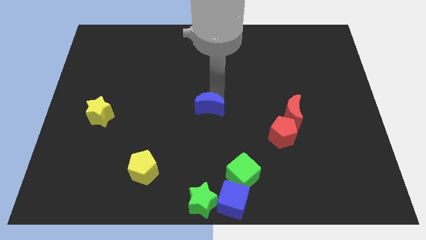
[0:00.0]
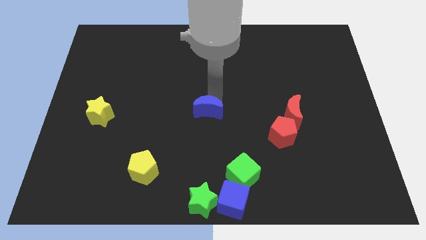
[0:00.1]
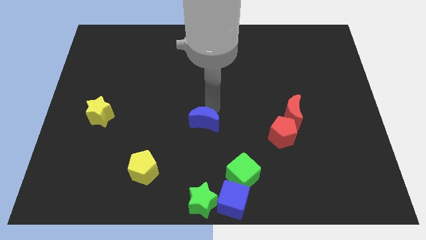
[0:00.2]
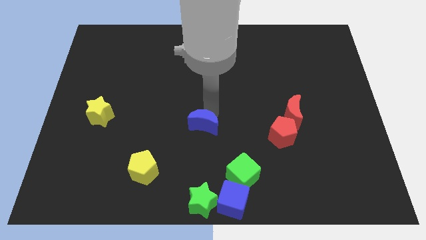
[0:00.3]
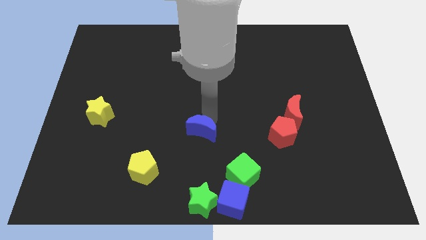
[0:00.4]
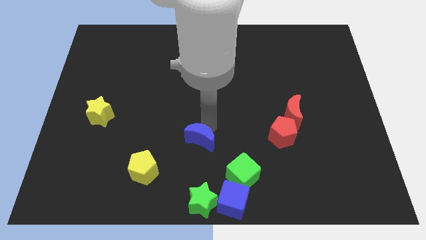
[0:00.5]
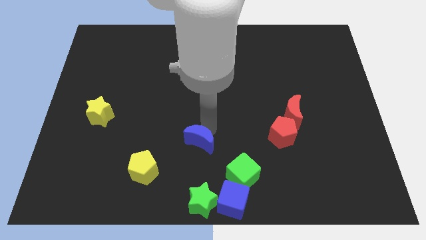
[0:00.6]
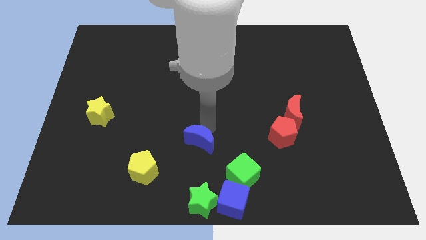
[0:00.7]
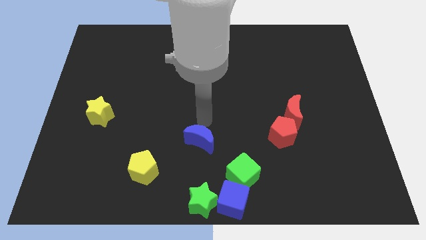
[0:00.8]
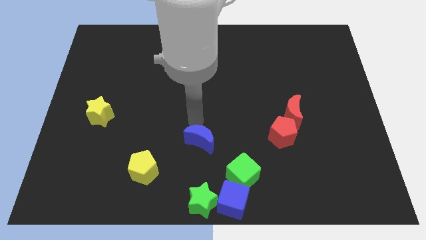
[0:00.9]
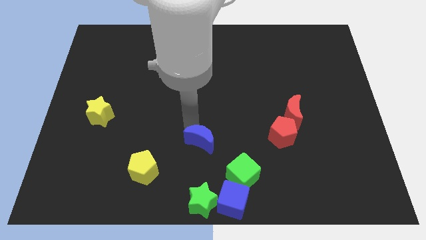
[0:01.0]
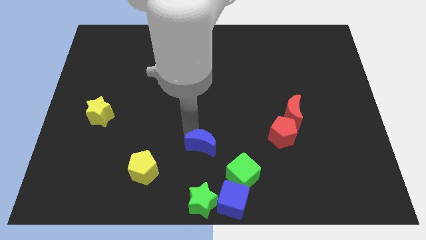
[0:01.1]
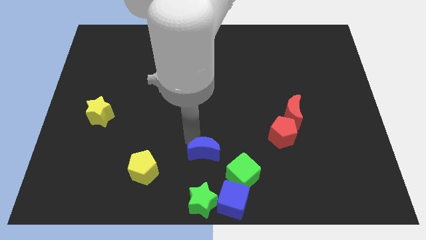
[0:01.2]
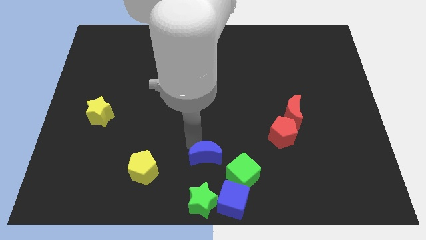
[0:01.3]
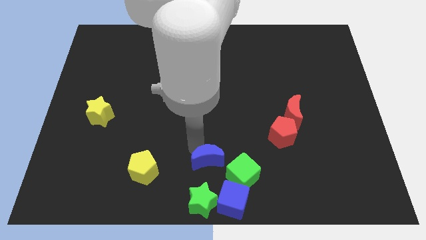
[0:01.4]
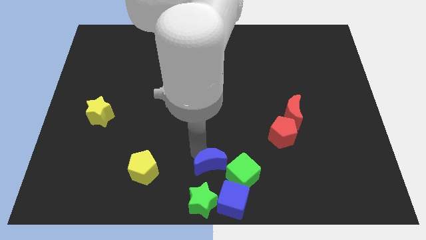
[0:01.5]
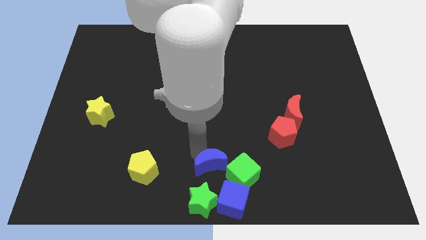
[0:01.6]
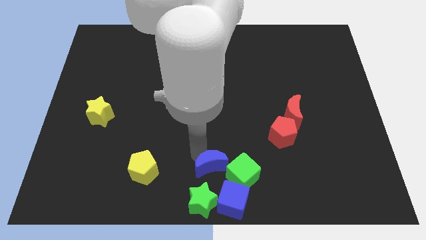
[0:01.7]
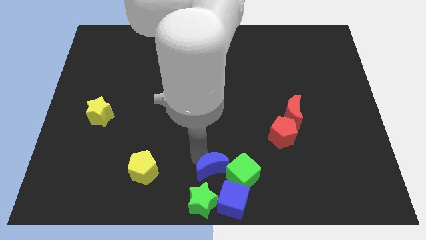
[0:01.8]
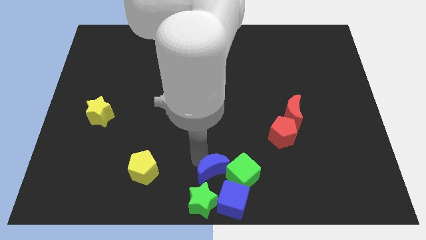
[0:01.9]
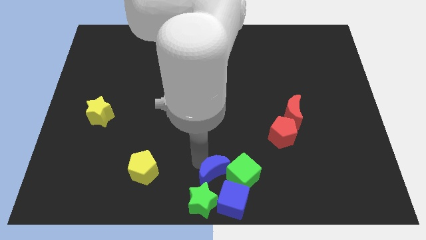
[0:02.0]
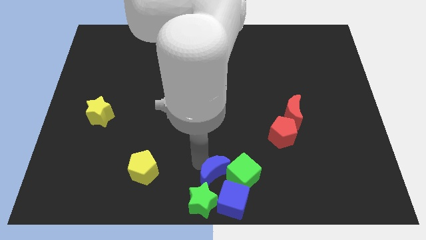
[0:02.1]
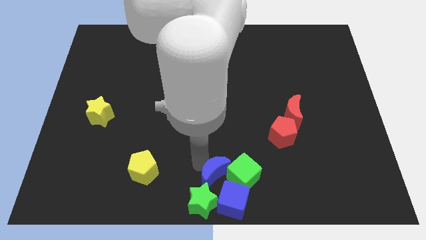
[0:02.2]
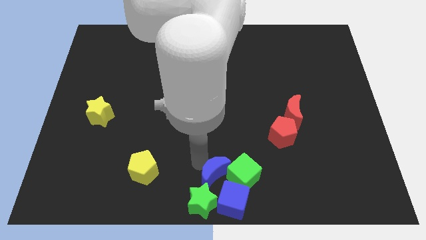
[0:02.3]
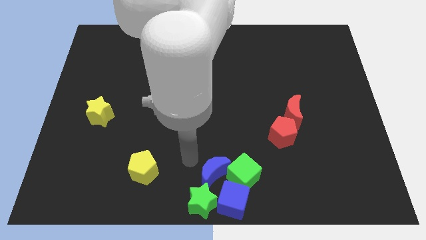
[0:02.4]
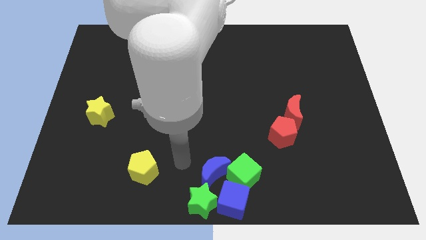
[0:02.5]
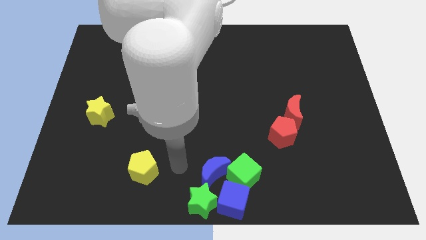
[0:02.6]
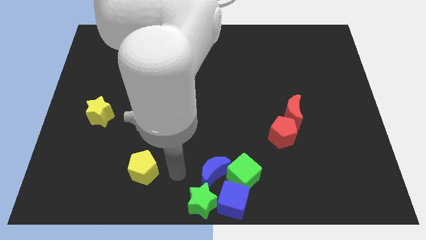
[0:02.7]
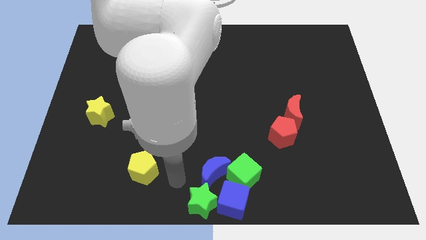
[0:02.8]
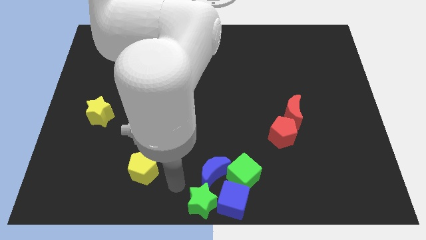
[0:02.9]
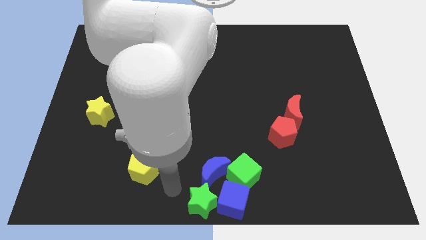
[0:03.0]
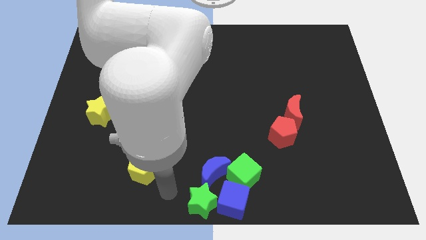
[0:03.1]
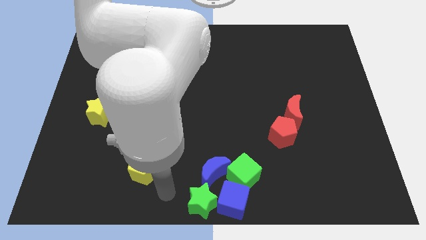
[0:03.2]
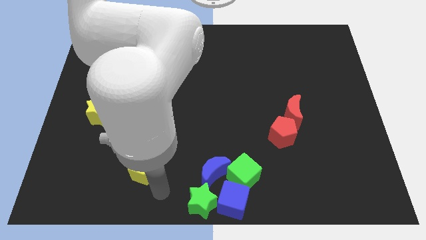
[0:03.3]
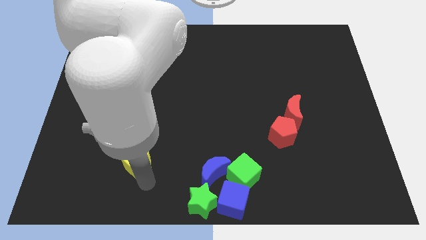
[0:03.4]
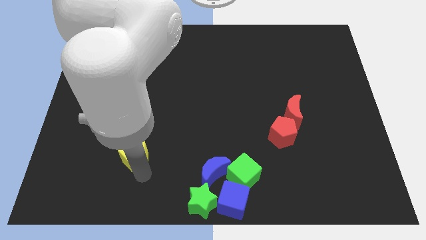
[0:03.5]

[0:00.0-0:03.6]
push the blue crescent into the green cube

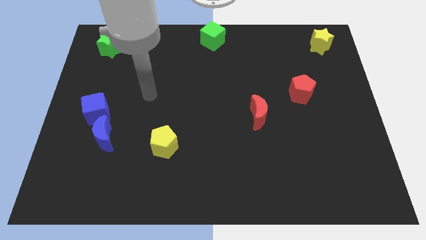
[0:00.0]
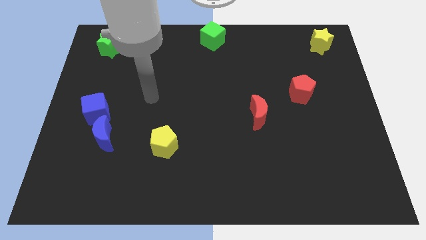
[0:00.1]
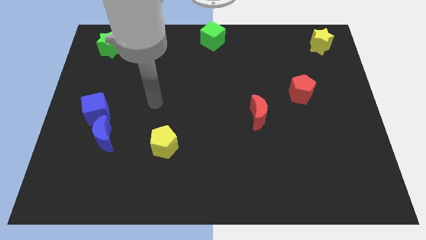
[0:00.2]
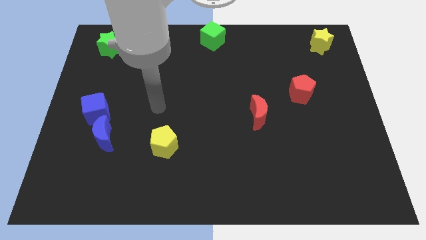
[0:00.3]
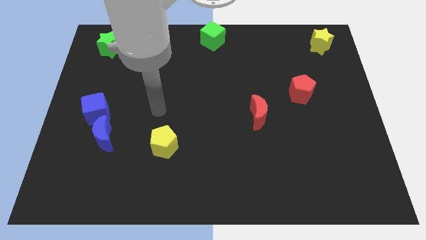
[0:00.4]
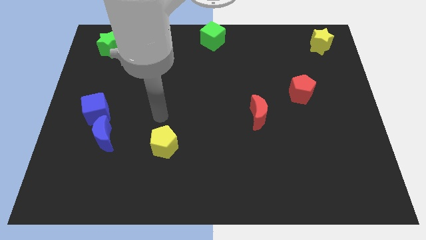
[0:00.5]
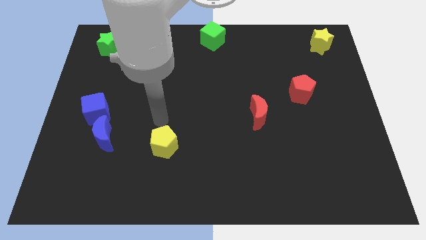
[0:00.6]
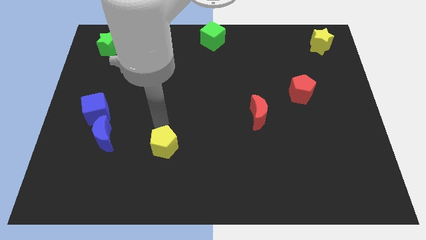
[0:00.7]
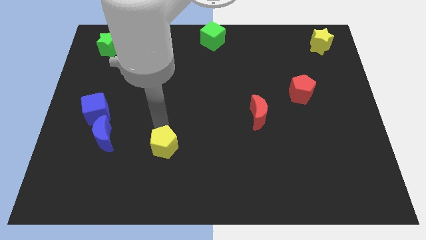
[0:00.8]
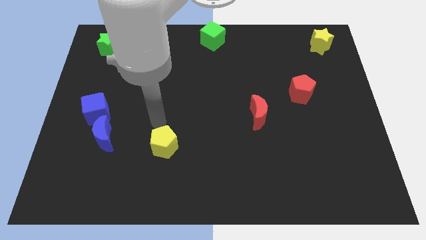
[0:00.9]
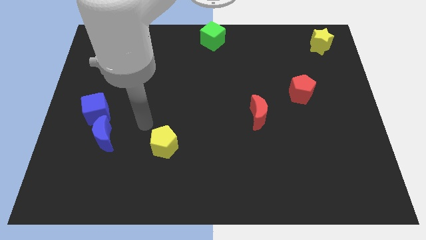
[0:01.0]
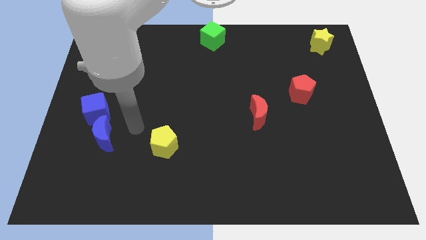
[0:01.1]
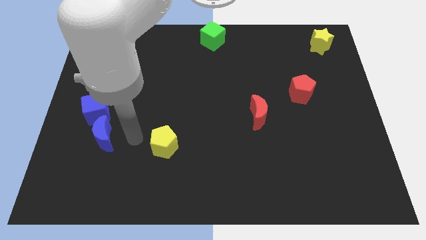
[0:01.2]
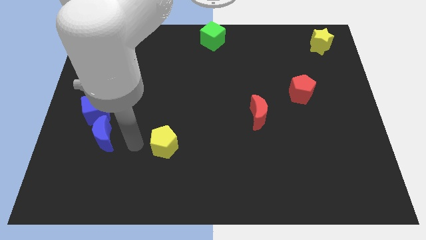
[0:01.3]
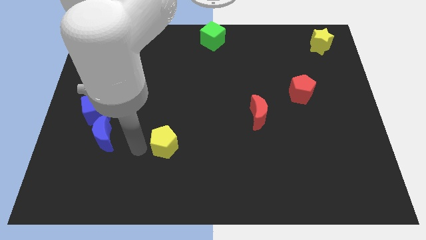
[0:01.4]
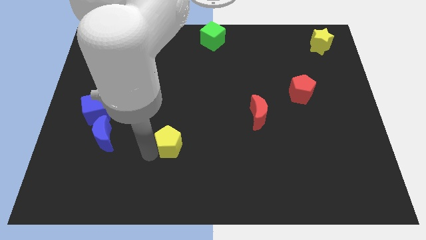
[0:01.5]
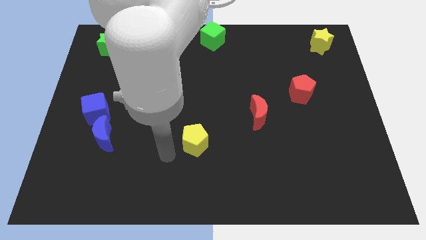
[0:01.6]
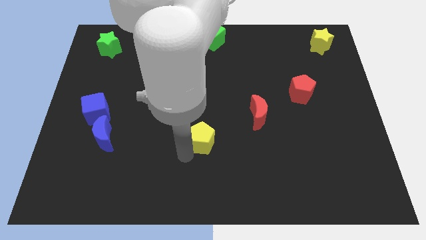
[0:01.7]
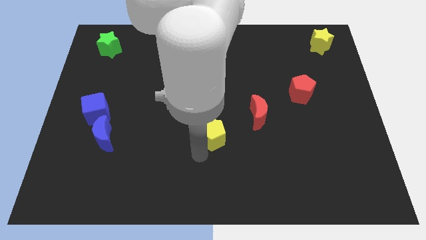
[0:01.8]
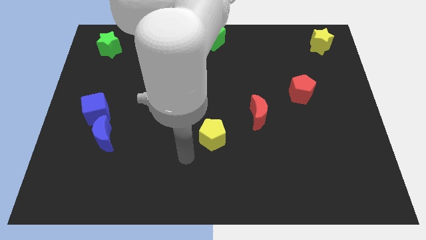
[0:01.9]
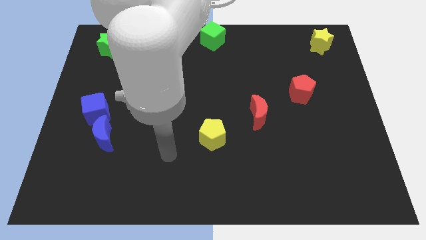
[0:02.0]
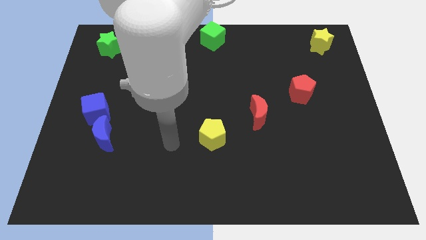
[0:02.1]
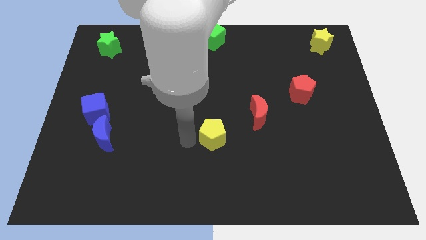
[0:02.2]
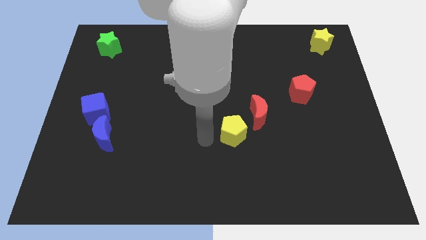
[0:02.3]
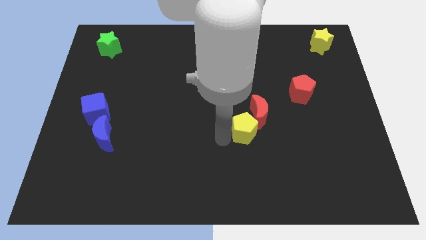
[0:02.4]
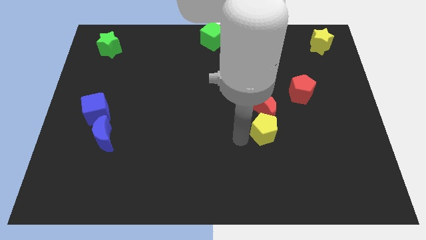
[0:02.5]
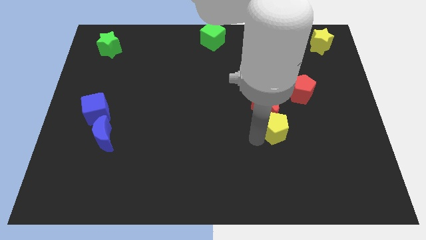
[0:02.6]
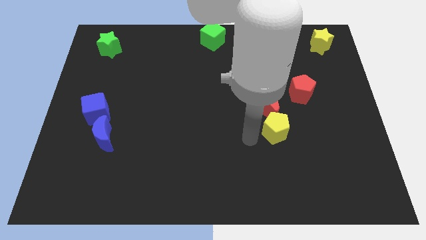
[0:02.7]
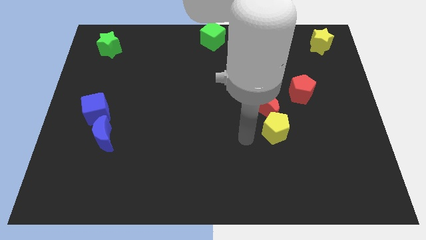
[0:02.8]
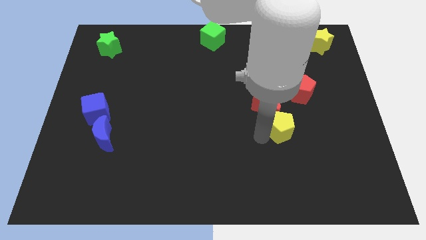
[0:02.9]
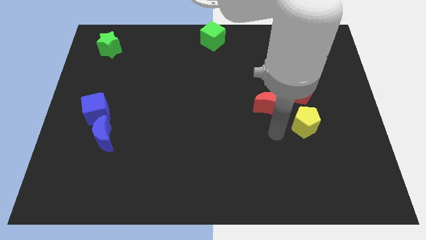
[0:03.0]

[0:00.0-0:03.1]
place yellow pentagon below red pentagon

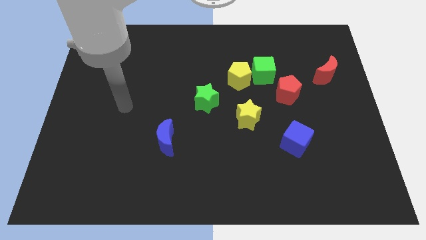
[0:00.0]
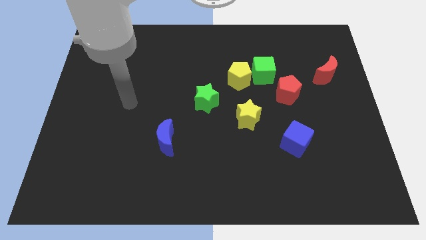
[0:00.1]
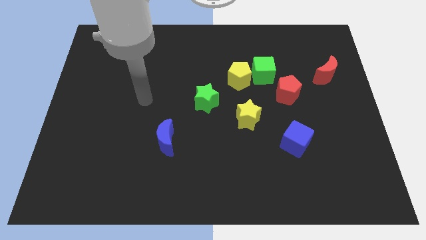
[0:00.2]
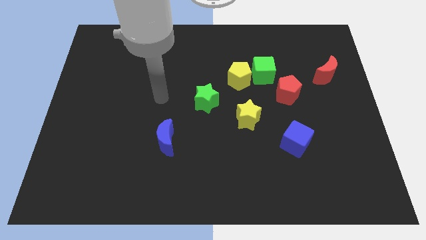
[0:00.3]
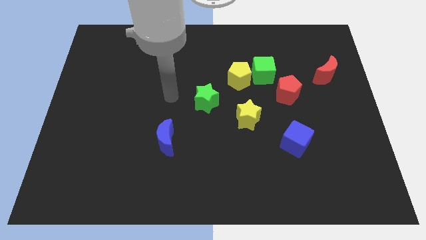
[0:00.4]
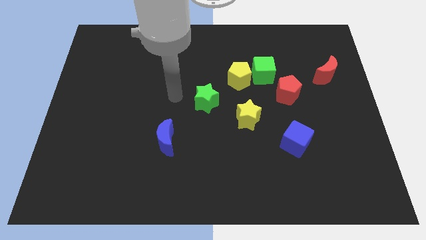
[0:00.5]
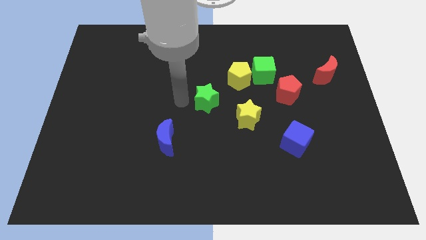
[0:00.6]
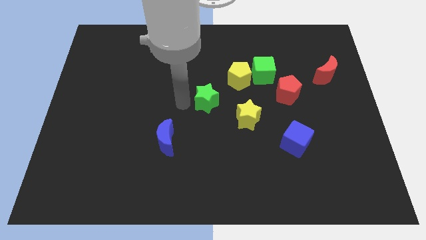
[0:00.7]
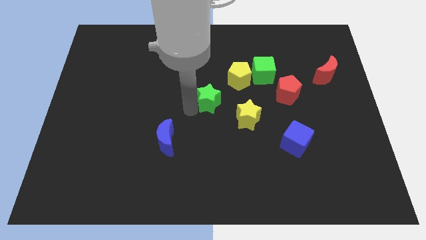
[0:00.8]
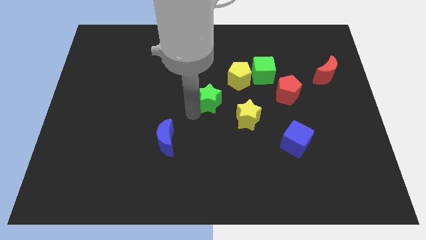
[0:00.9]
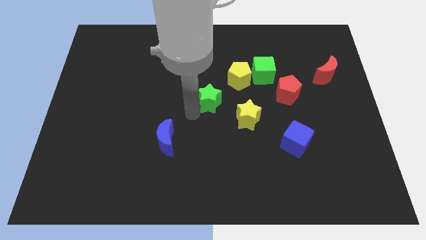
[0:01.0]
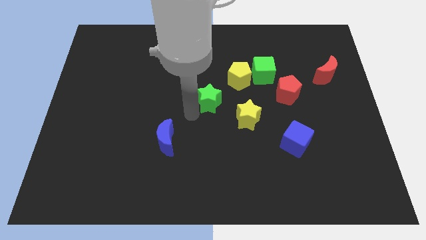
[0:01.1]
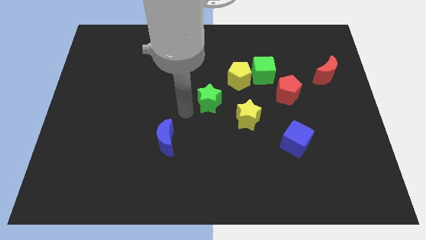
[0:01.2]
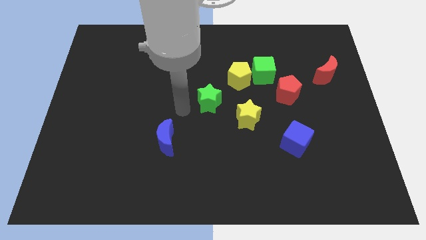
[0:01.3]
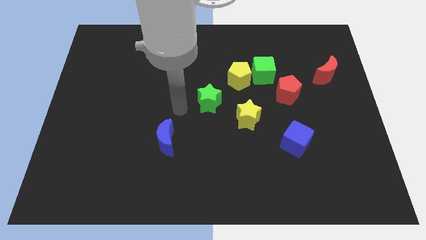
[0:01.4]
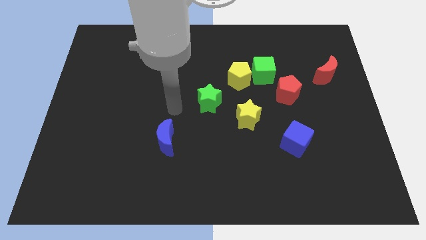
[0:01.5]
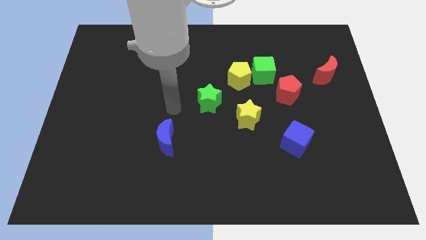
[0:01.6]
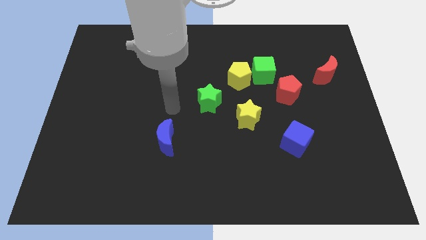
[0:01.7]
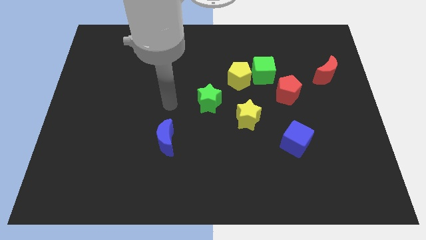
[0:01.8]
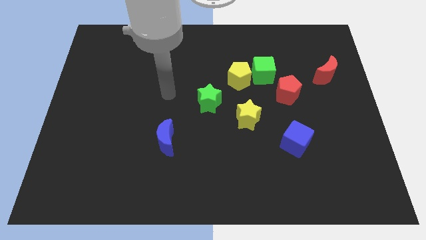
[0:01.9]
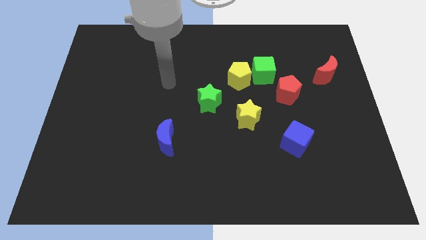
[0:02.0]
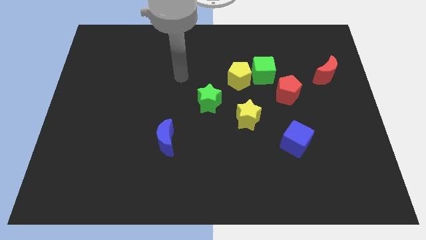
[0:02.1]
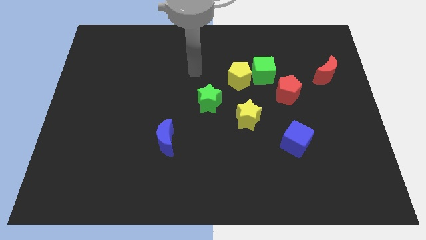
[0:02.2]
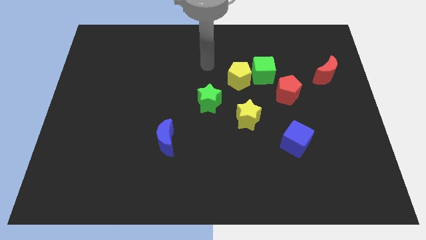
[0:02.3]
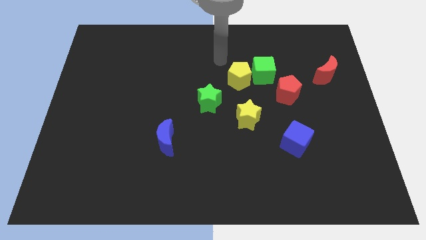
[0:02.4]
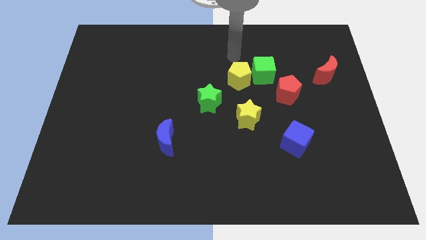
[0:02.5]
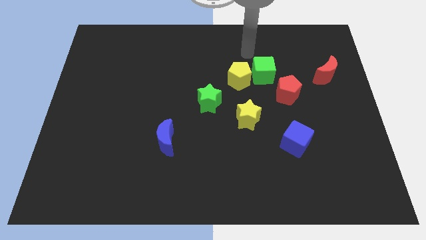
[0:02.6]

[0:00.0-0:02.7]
point your hand at the top side of the yellow pentagon
